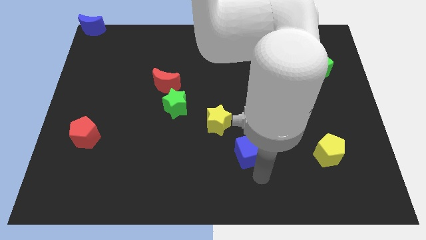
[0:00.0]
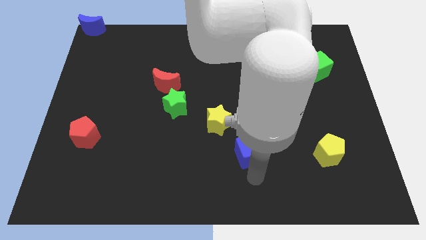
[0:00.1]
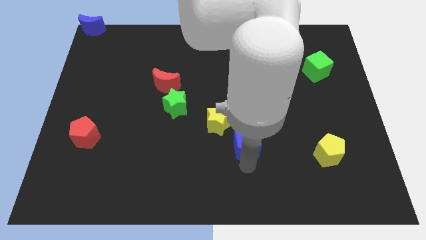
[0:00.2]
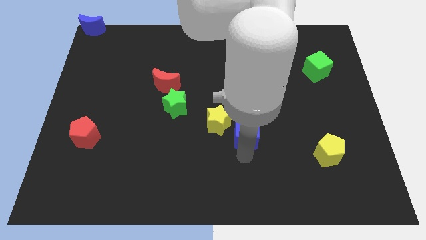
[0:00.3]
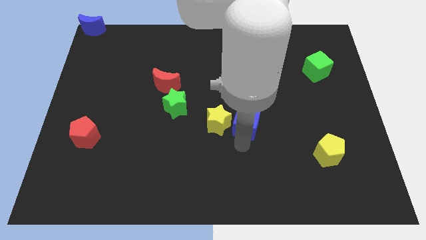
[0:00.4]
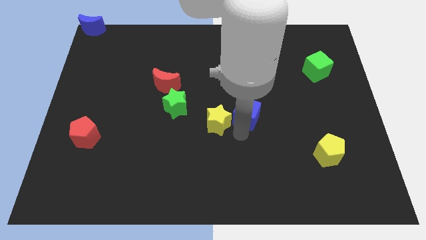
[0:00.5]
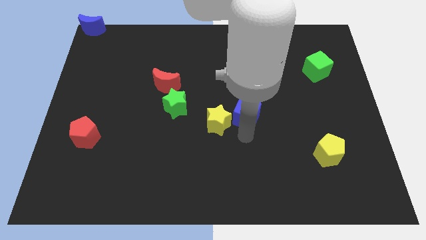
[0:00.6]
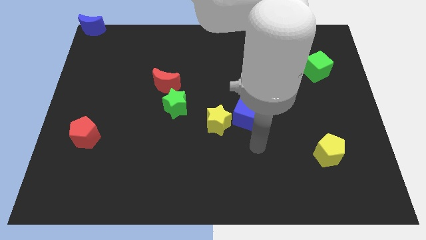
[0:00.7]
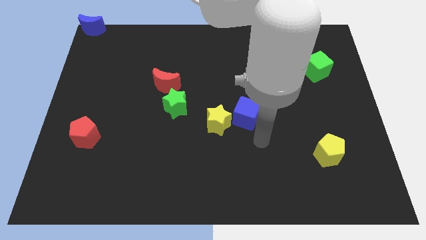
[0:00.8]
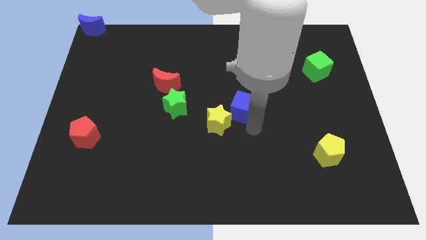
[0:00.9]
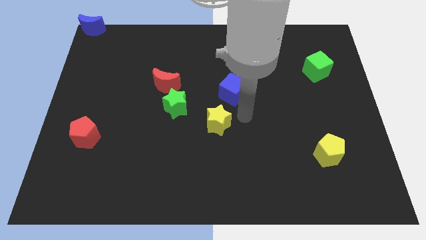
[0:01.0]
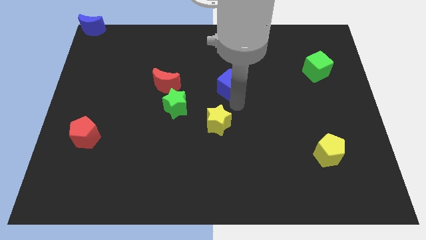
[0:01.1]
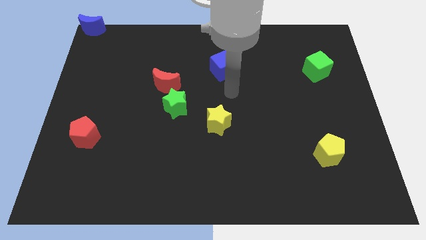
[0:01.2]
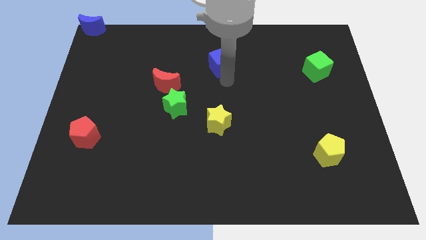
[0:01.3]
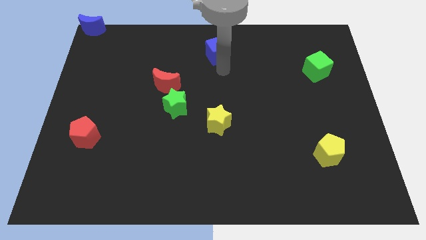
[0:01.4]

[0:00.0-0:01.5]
place the blue cube to the top of the yellow star

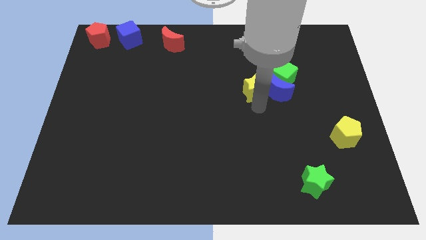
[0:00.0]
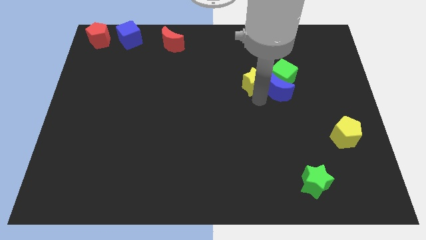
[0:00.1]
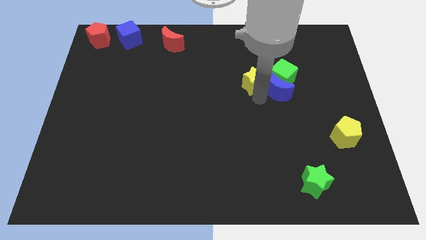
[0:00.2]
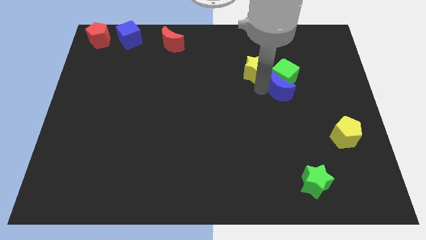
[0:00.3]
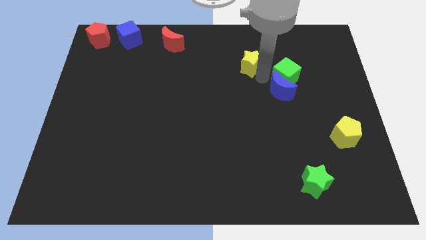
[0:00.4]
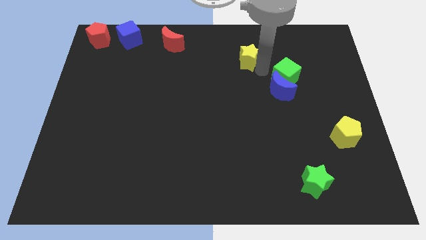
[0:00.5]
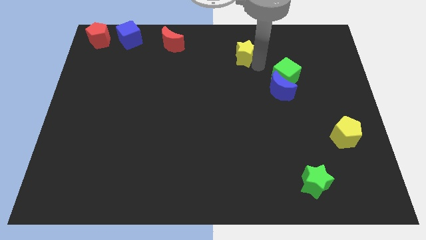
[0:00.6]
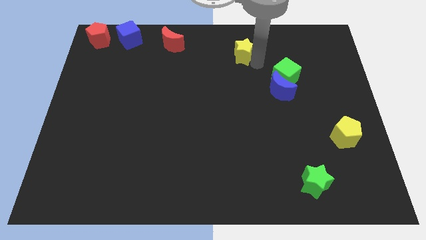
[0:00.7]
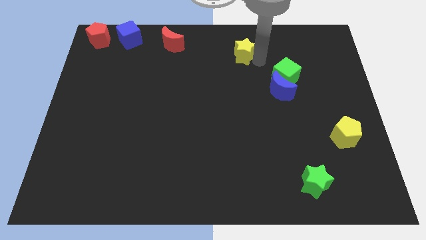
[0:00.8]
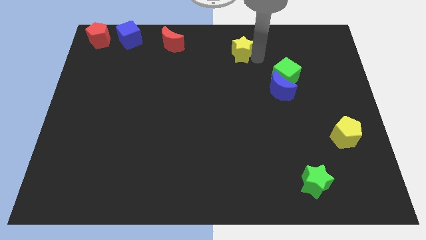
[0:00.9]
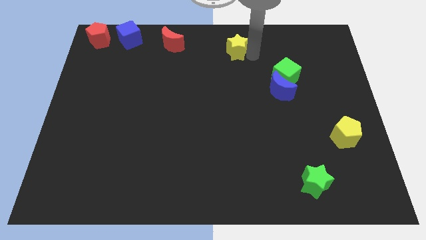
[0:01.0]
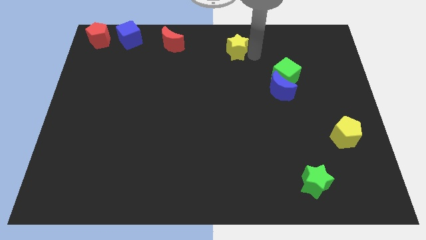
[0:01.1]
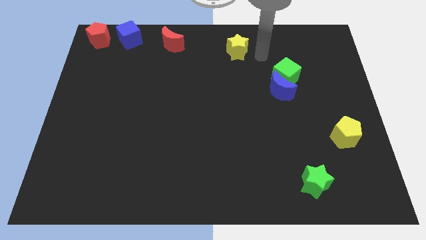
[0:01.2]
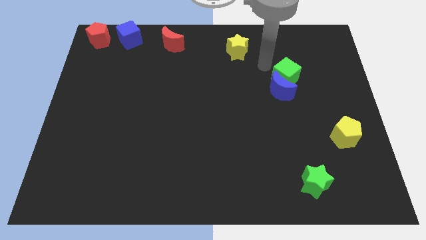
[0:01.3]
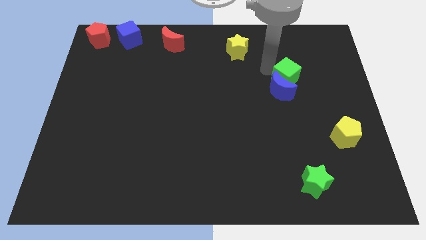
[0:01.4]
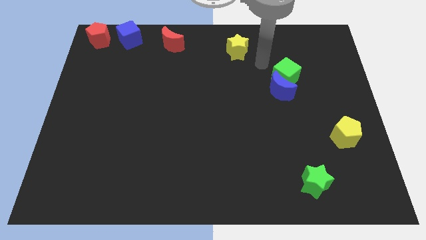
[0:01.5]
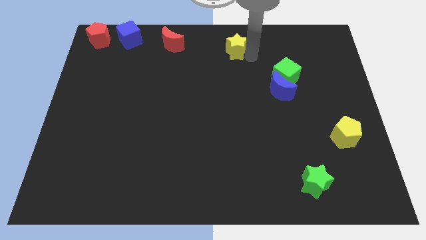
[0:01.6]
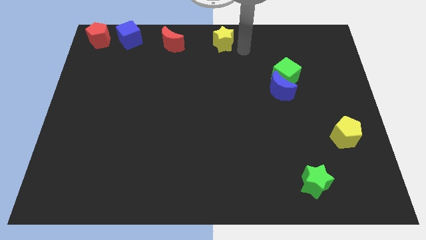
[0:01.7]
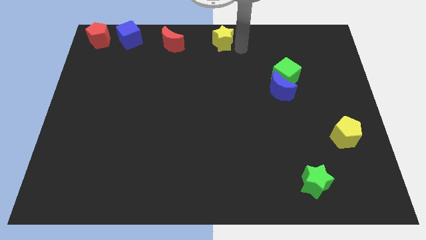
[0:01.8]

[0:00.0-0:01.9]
separate the yellow star from blue cube

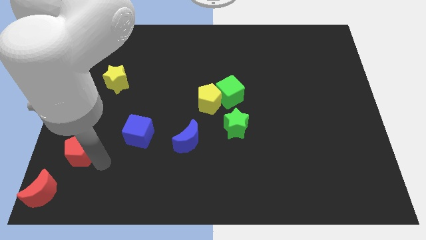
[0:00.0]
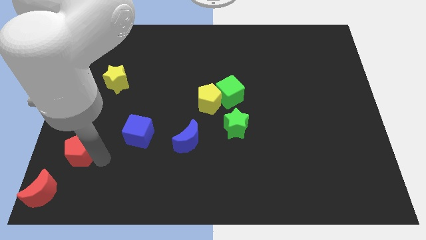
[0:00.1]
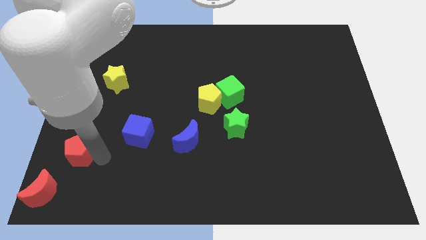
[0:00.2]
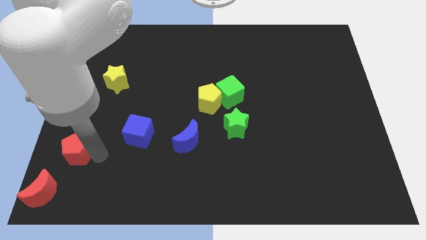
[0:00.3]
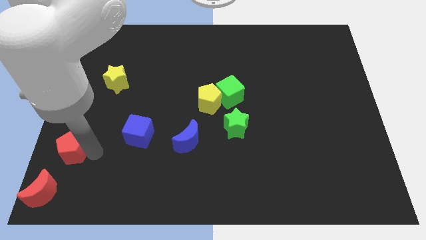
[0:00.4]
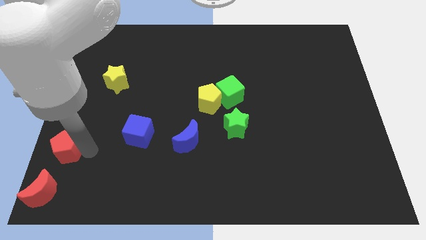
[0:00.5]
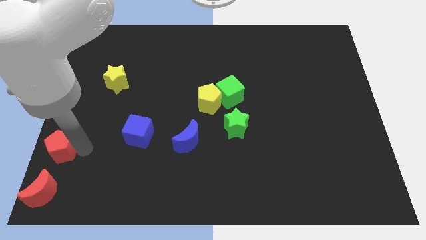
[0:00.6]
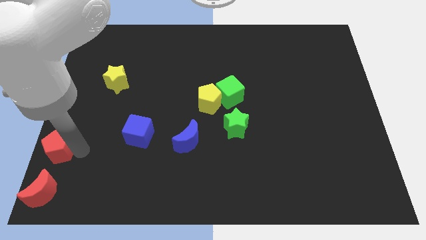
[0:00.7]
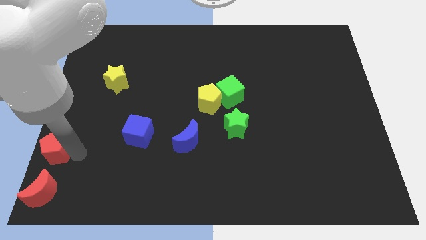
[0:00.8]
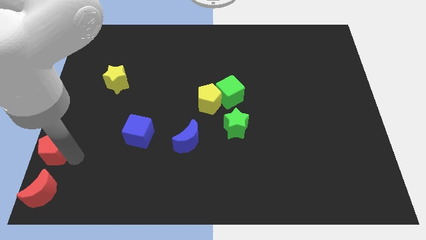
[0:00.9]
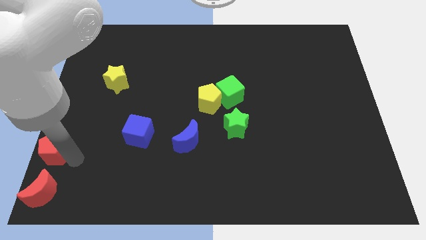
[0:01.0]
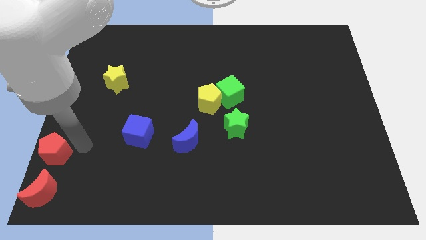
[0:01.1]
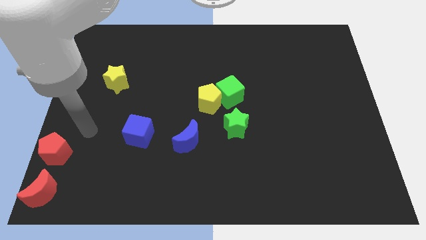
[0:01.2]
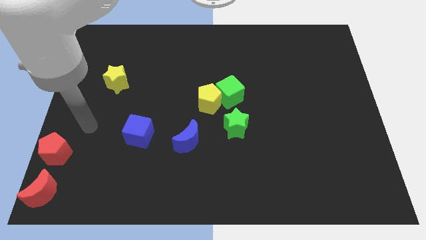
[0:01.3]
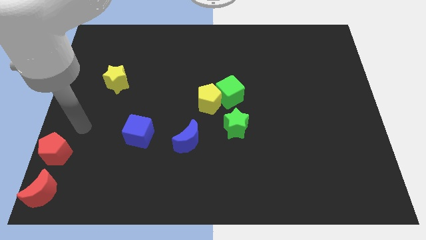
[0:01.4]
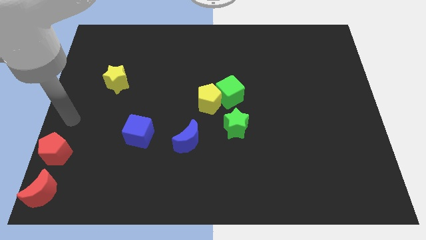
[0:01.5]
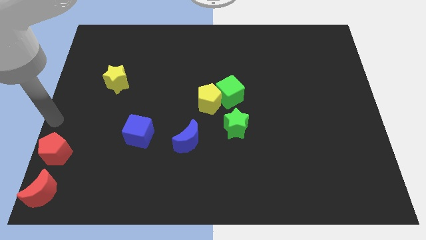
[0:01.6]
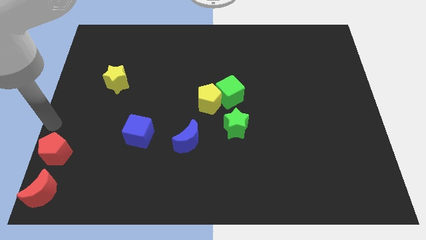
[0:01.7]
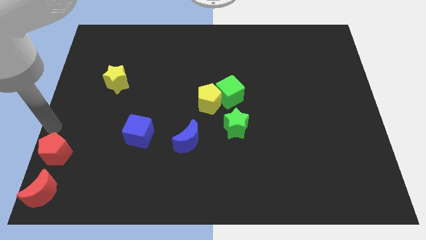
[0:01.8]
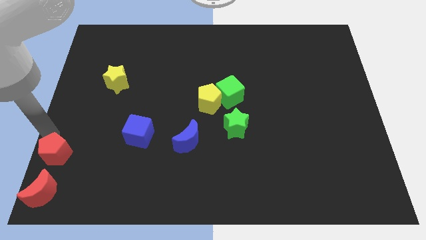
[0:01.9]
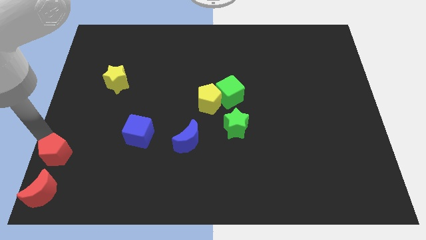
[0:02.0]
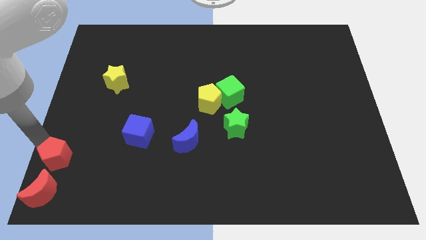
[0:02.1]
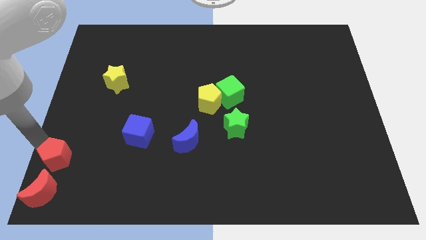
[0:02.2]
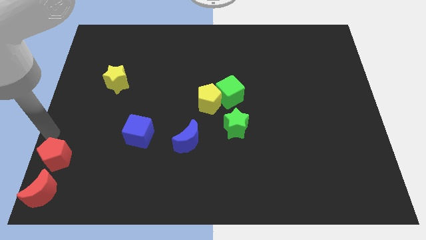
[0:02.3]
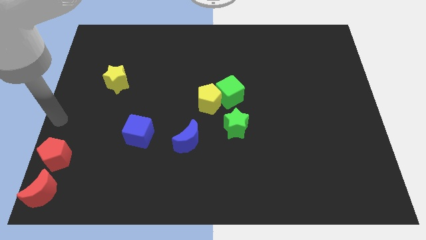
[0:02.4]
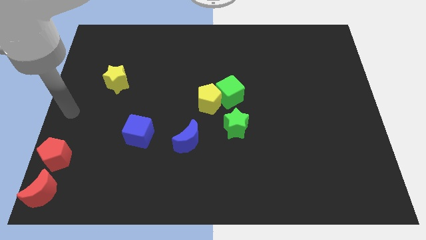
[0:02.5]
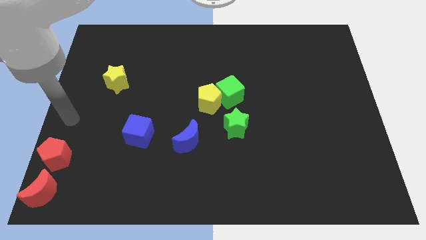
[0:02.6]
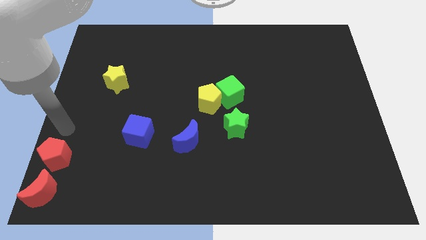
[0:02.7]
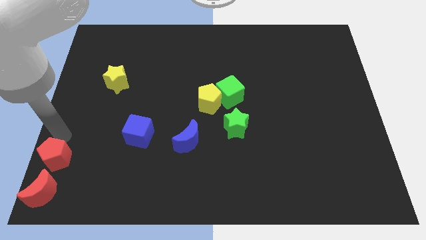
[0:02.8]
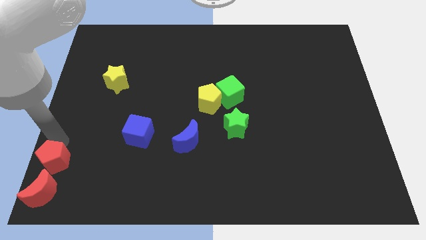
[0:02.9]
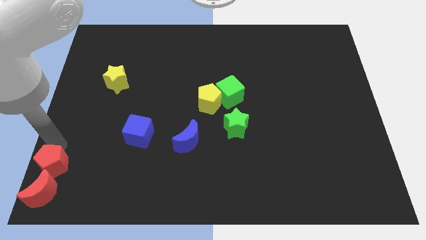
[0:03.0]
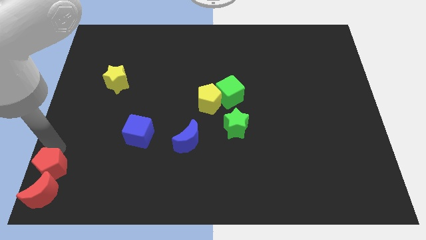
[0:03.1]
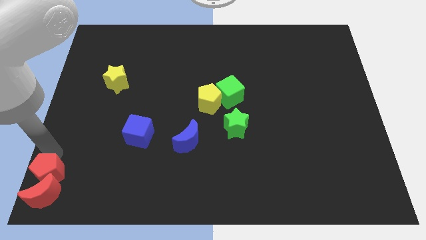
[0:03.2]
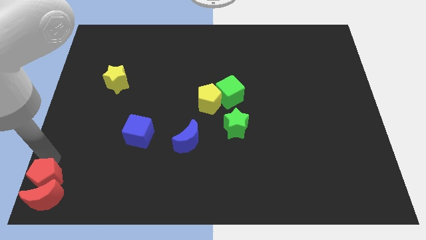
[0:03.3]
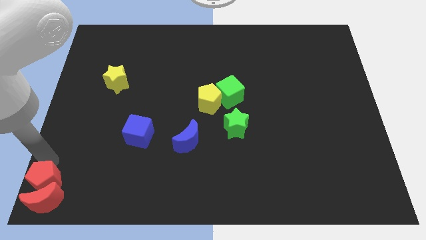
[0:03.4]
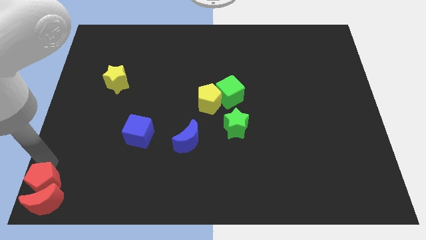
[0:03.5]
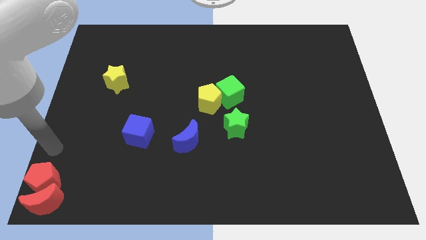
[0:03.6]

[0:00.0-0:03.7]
move red pentagon into red crescent

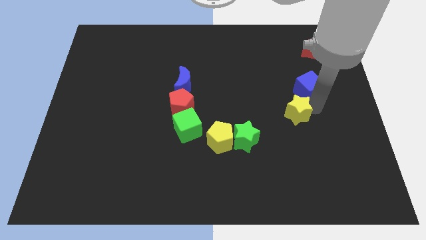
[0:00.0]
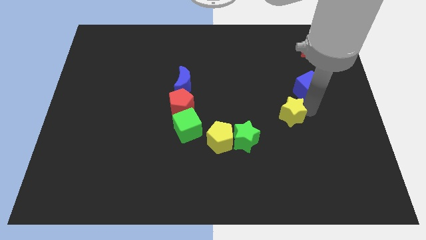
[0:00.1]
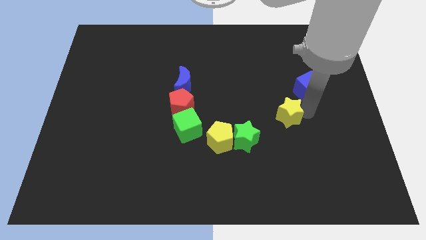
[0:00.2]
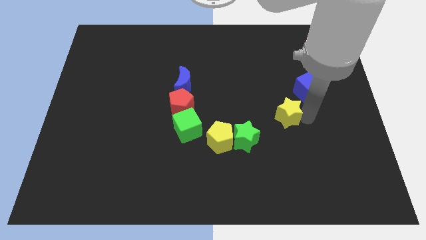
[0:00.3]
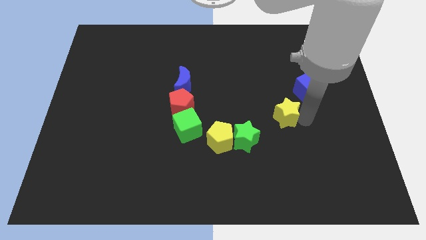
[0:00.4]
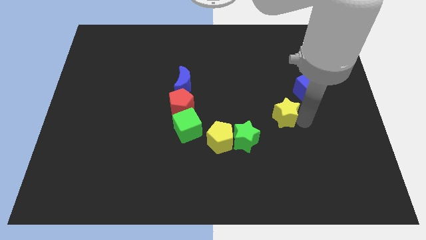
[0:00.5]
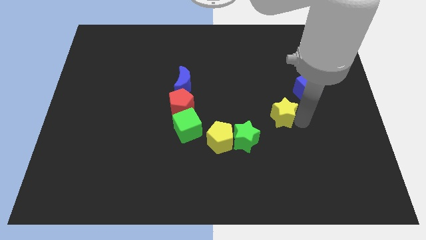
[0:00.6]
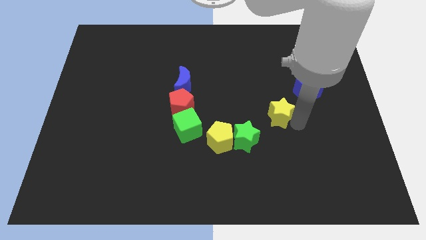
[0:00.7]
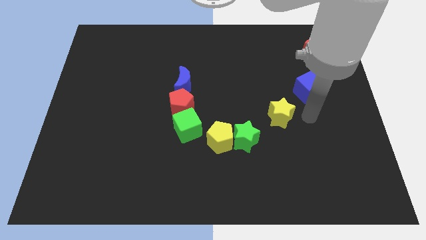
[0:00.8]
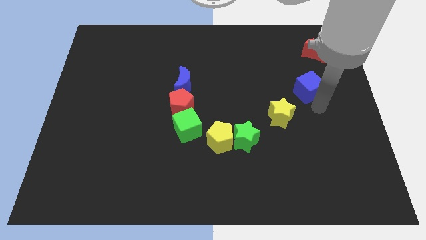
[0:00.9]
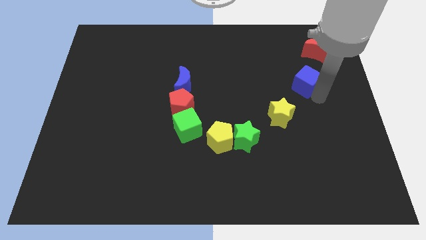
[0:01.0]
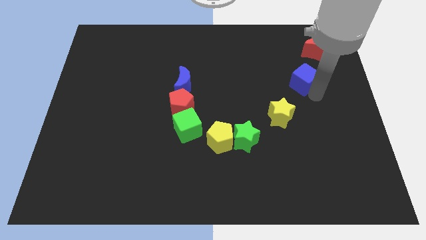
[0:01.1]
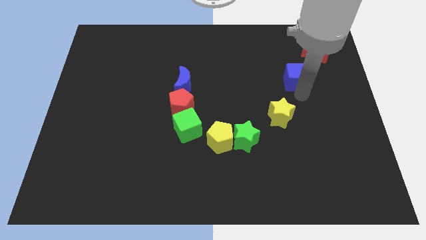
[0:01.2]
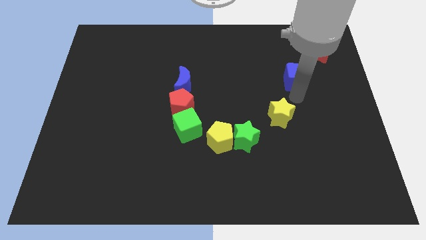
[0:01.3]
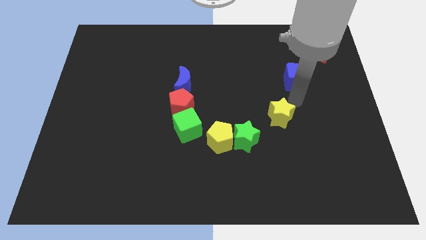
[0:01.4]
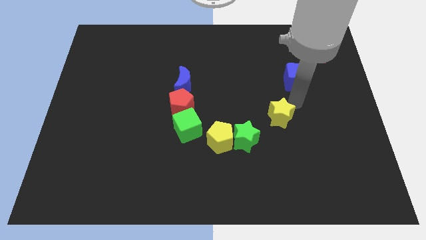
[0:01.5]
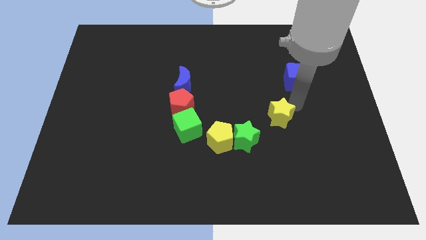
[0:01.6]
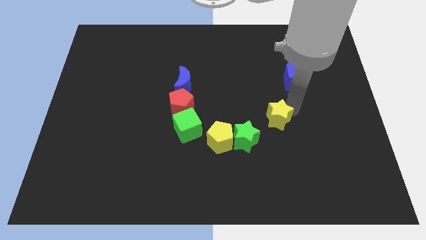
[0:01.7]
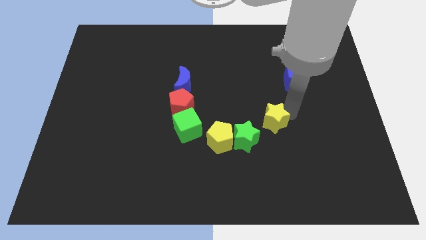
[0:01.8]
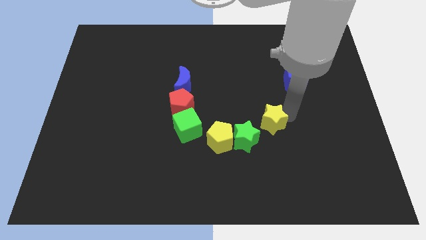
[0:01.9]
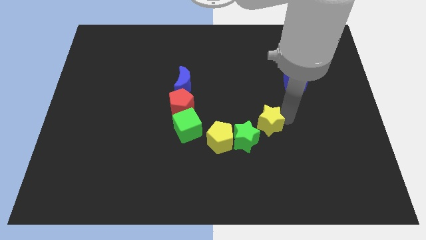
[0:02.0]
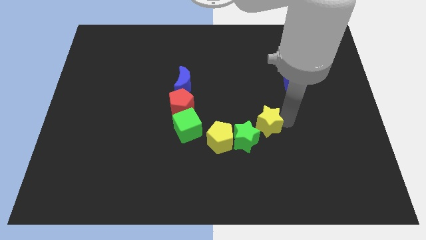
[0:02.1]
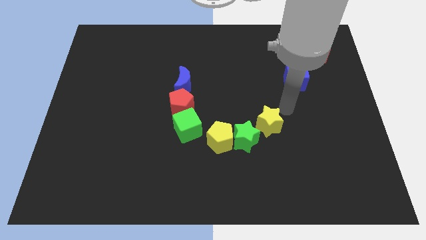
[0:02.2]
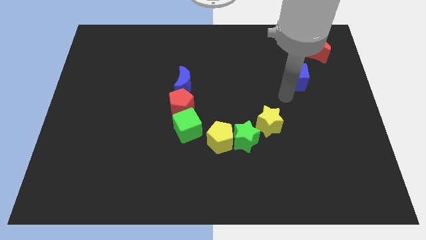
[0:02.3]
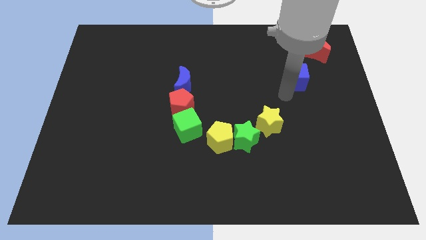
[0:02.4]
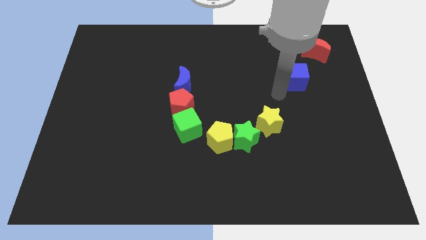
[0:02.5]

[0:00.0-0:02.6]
push yellow star beside green star
